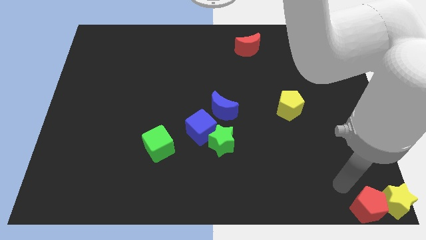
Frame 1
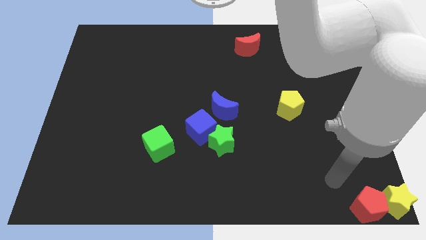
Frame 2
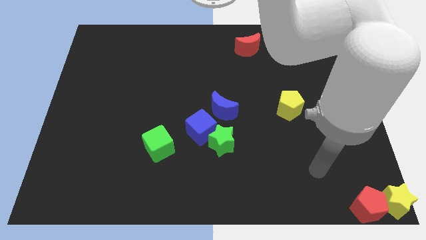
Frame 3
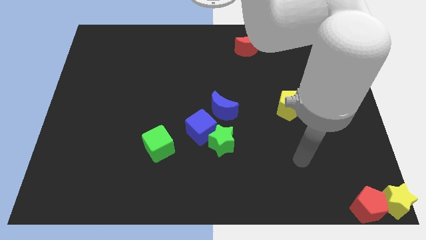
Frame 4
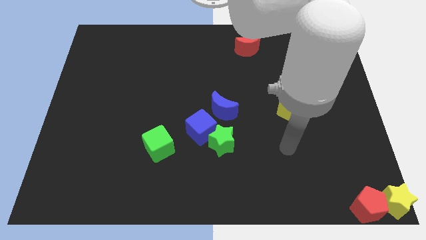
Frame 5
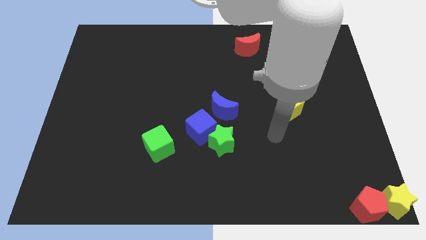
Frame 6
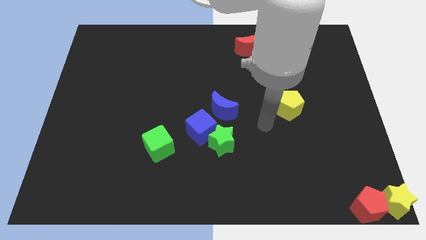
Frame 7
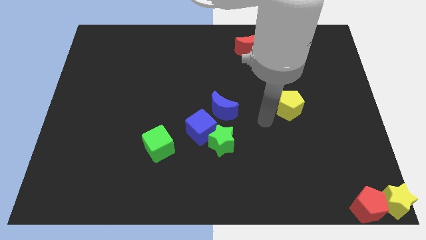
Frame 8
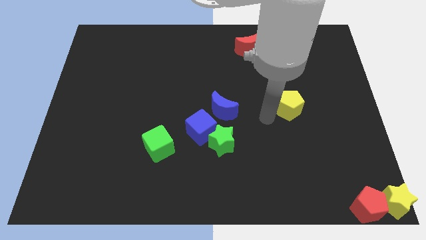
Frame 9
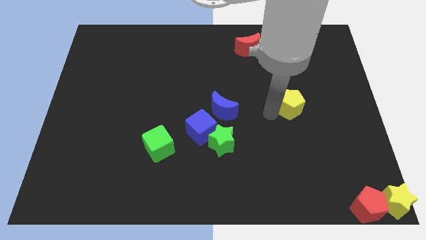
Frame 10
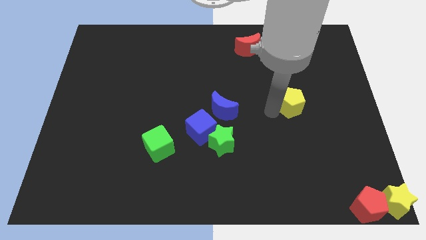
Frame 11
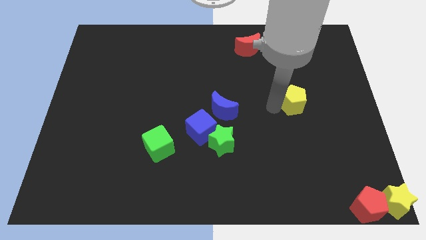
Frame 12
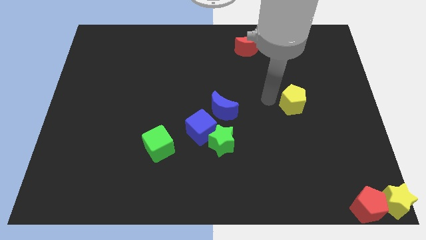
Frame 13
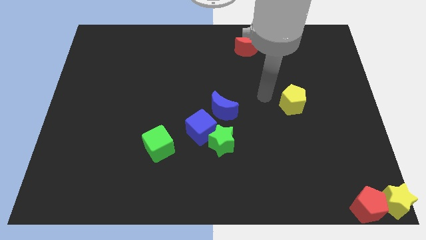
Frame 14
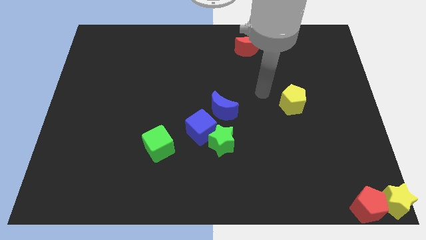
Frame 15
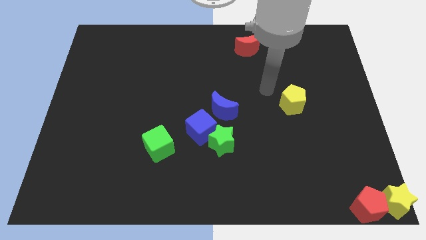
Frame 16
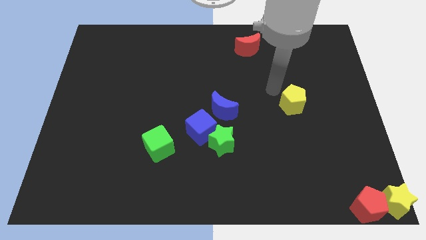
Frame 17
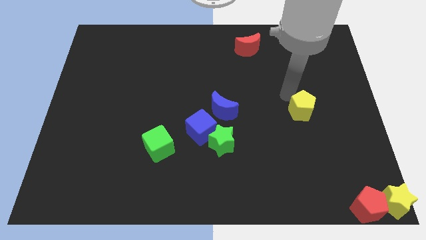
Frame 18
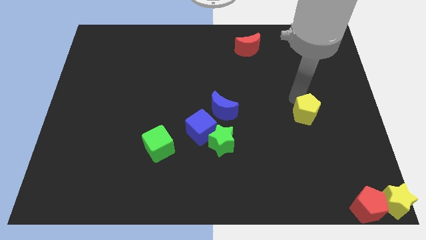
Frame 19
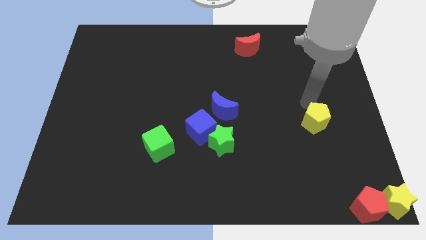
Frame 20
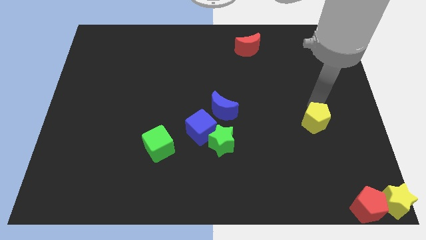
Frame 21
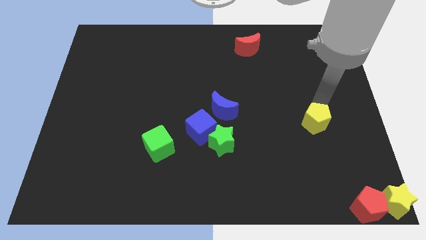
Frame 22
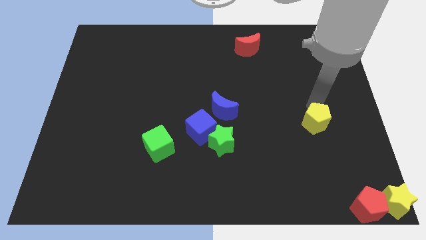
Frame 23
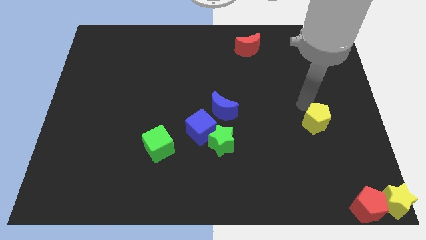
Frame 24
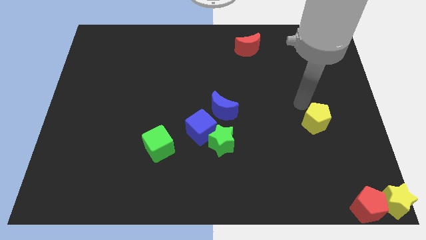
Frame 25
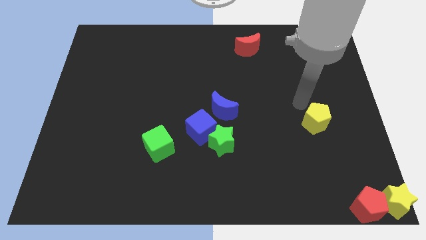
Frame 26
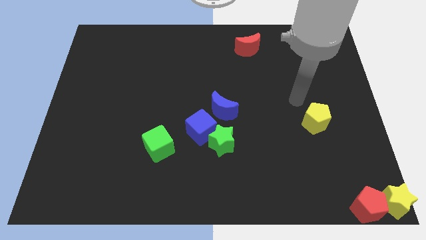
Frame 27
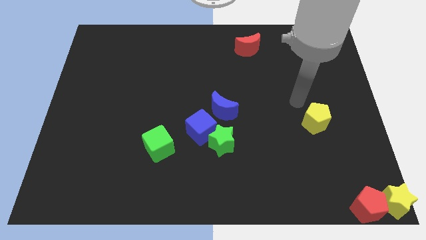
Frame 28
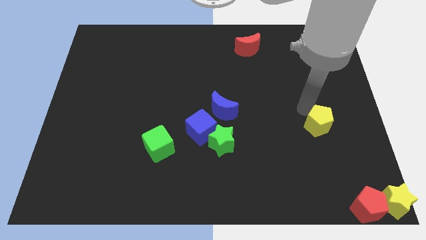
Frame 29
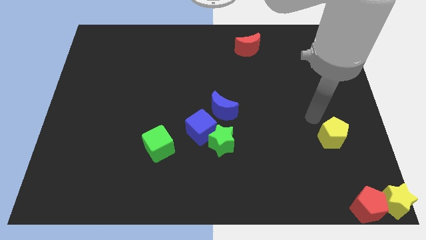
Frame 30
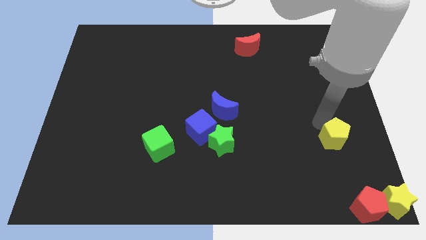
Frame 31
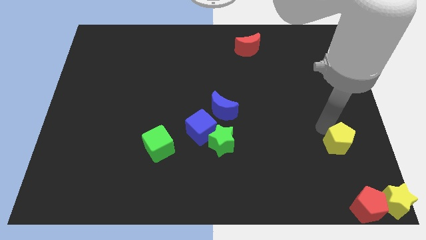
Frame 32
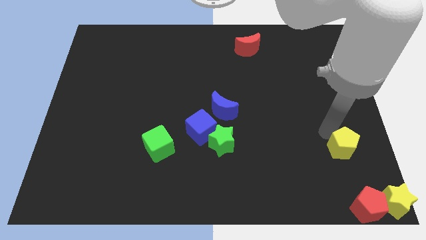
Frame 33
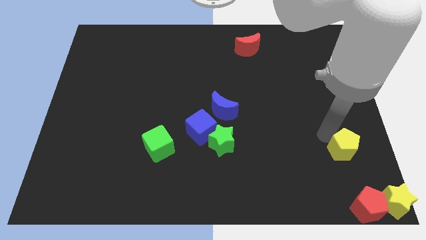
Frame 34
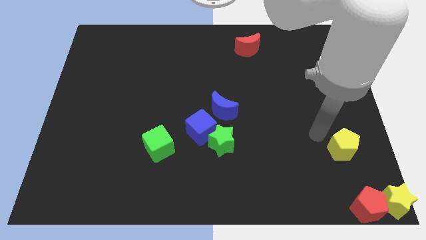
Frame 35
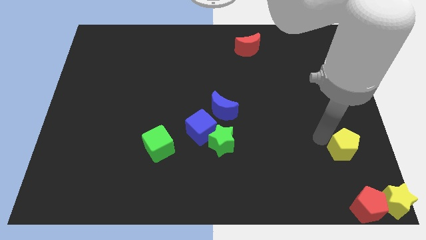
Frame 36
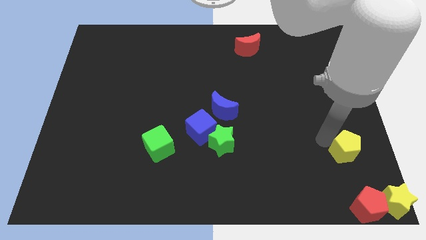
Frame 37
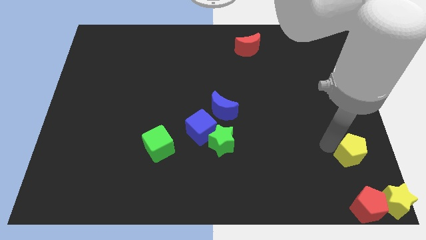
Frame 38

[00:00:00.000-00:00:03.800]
place the yellow pentagon at the top of red pentagon

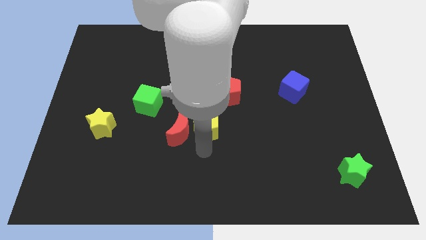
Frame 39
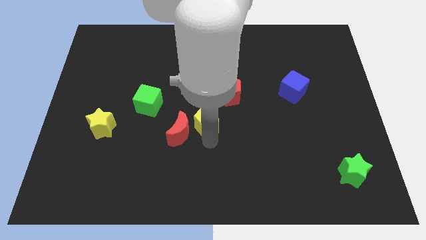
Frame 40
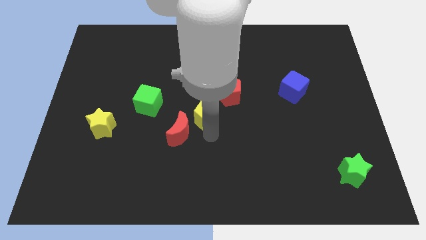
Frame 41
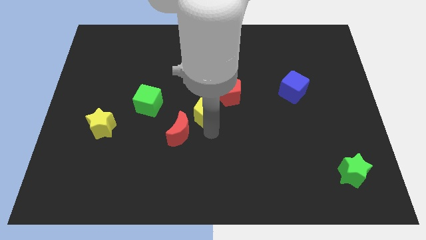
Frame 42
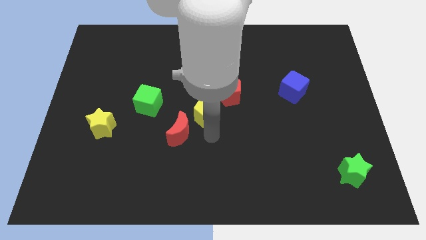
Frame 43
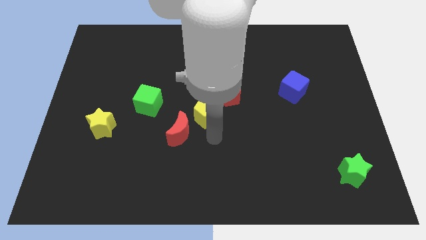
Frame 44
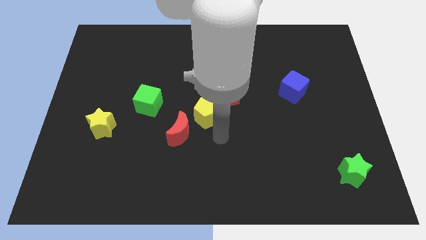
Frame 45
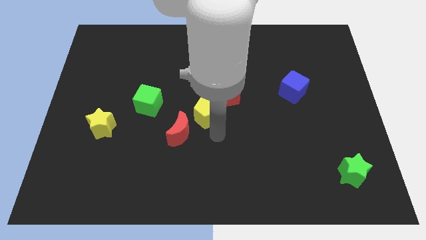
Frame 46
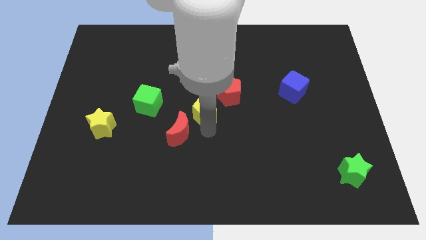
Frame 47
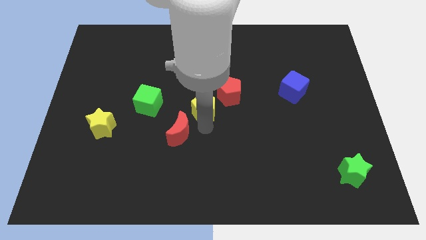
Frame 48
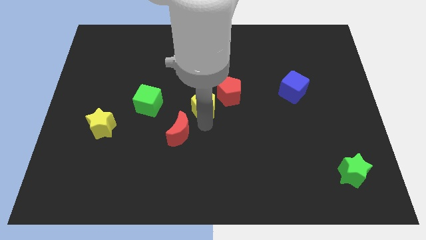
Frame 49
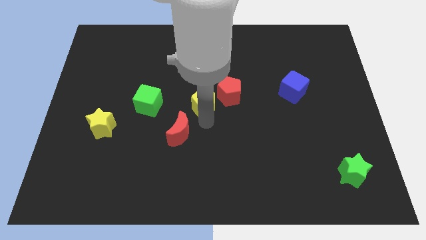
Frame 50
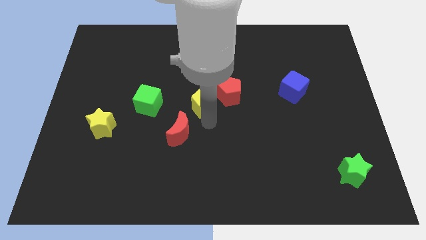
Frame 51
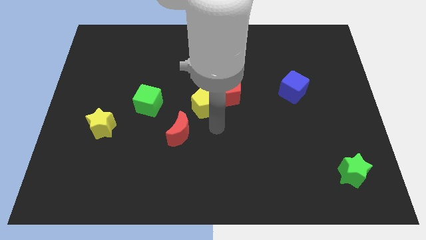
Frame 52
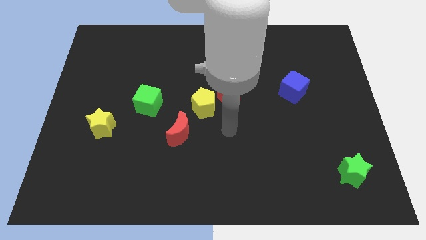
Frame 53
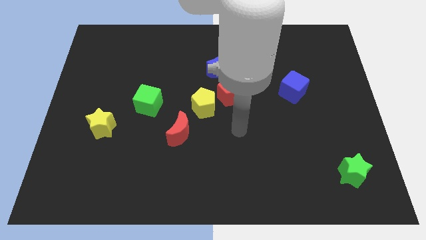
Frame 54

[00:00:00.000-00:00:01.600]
move yellow pentagon slightly upwards

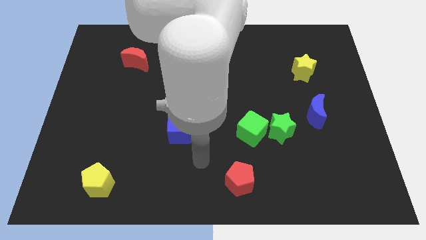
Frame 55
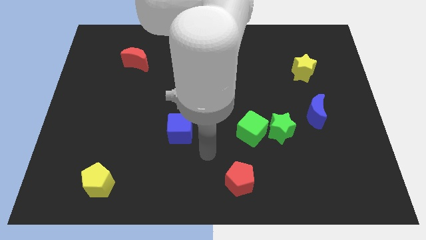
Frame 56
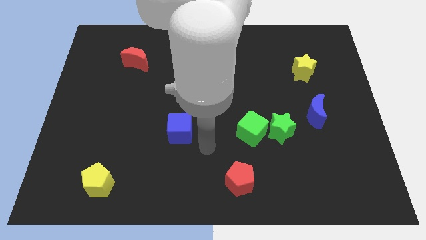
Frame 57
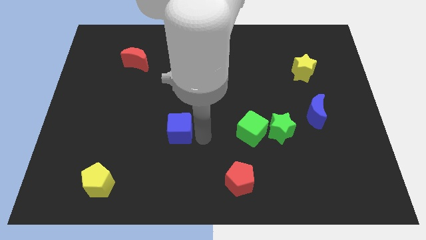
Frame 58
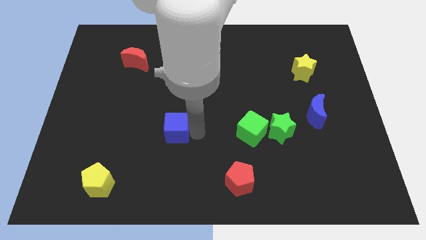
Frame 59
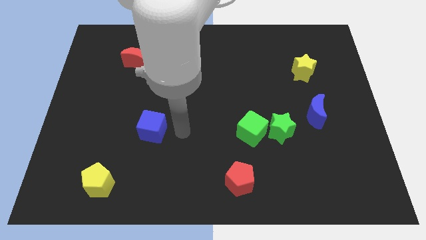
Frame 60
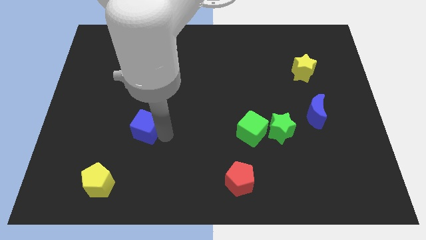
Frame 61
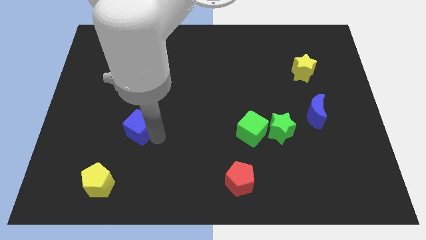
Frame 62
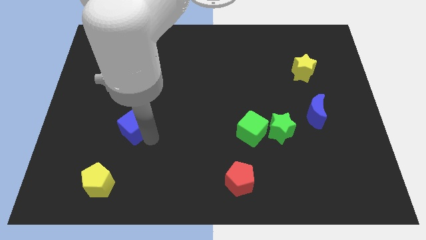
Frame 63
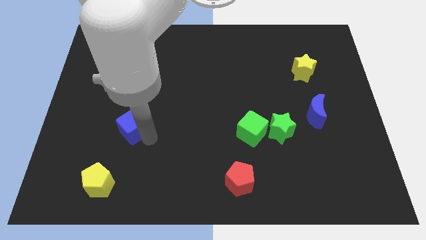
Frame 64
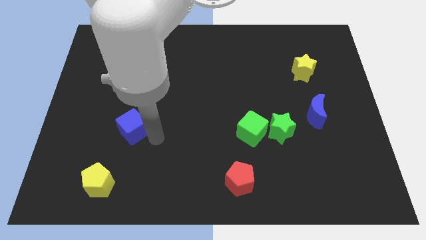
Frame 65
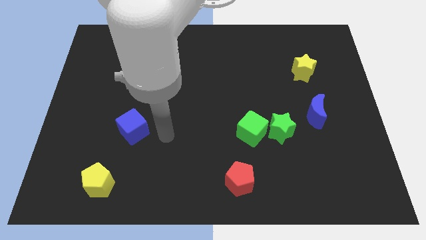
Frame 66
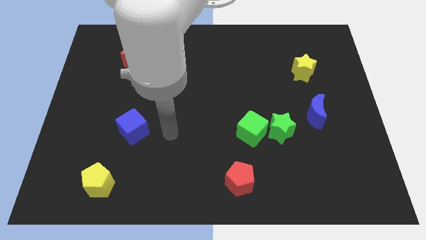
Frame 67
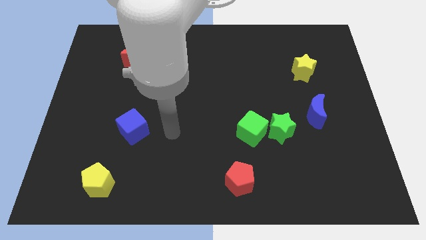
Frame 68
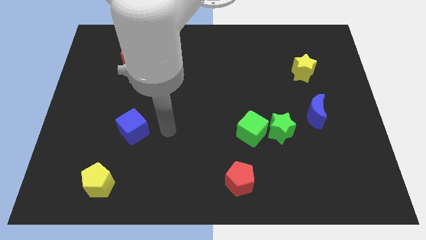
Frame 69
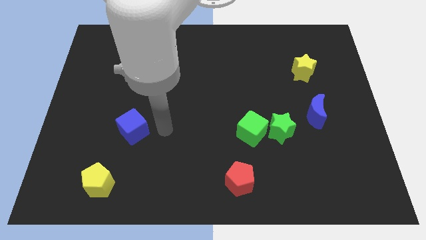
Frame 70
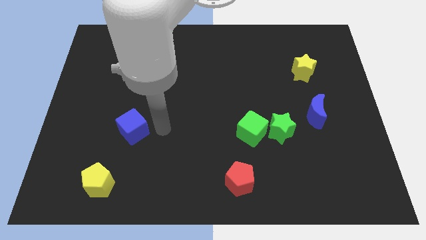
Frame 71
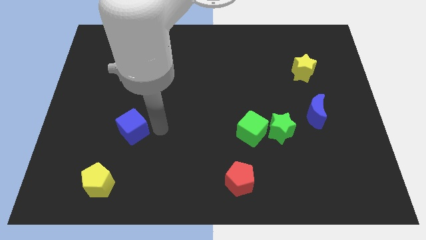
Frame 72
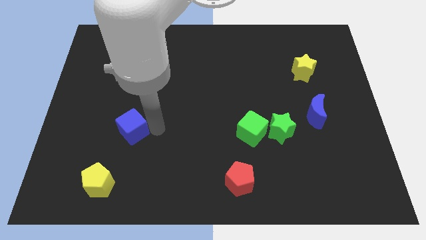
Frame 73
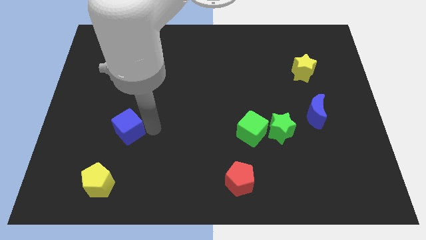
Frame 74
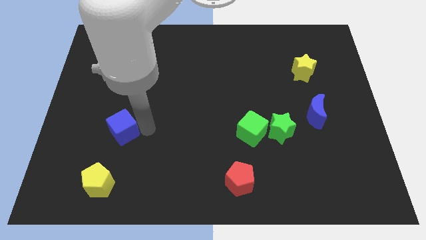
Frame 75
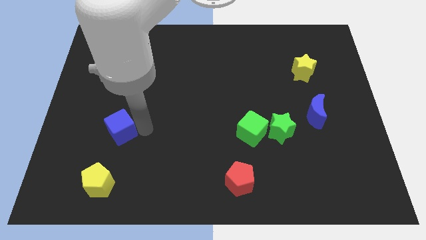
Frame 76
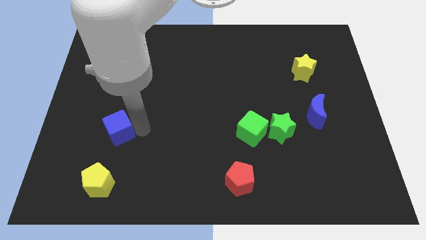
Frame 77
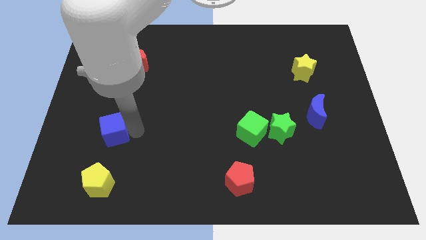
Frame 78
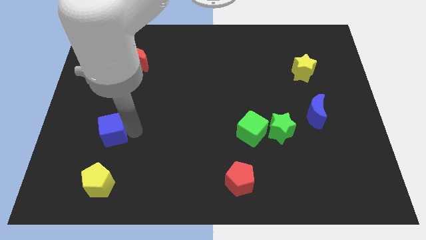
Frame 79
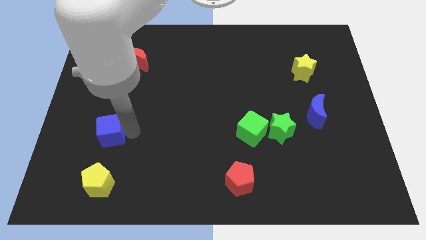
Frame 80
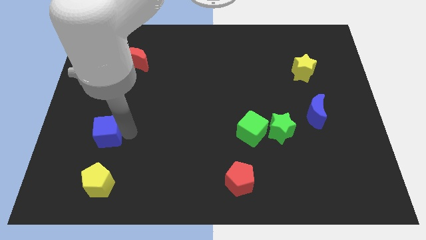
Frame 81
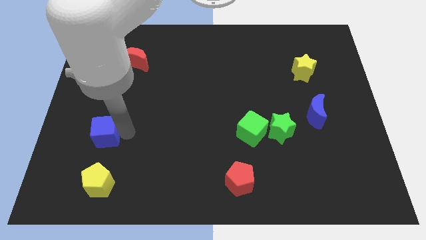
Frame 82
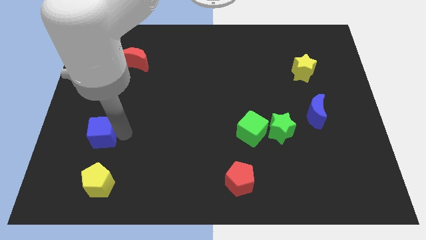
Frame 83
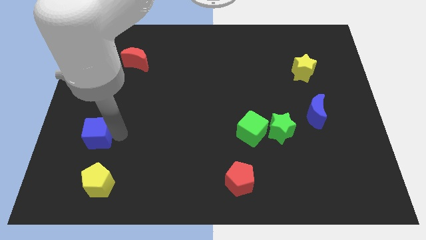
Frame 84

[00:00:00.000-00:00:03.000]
place blue cube above yellow pentagon

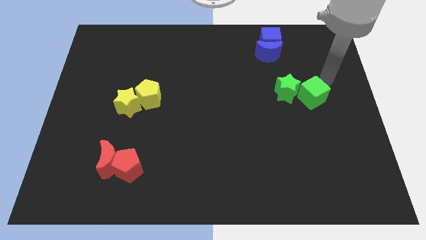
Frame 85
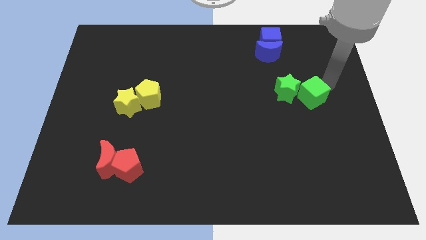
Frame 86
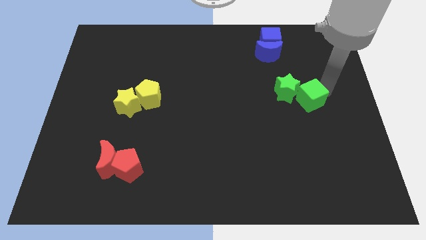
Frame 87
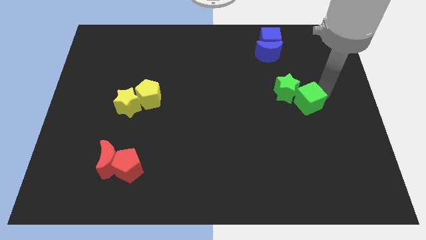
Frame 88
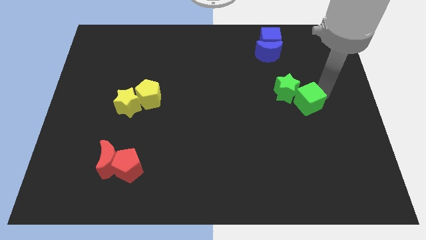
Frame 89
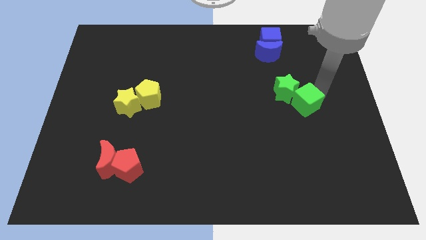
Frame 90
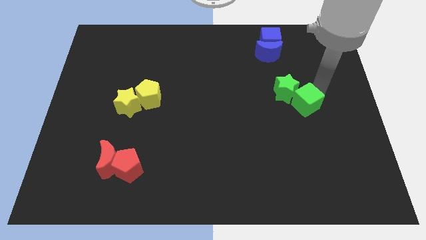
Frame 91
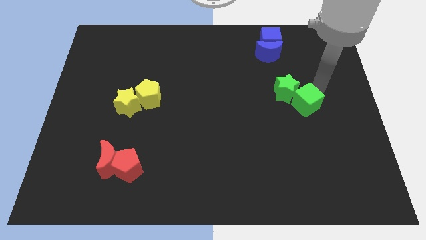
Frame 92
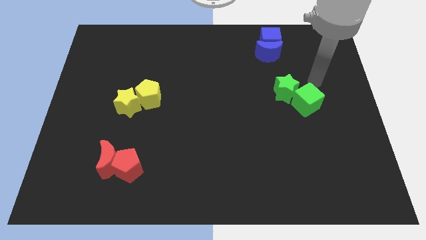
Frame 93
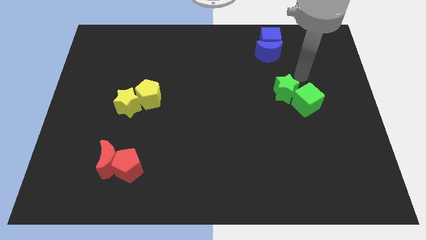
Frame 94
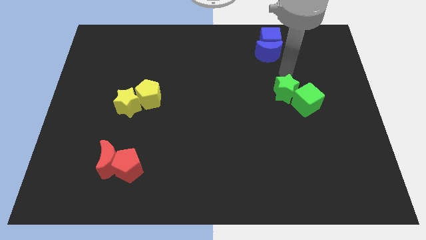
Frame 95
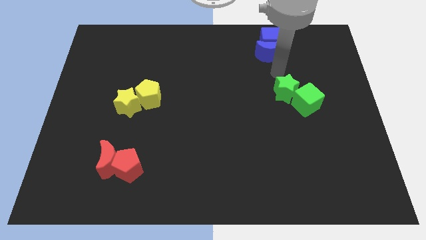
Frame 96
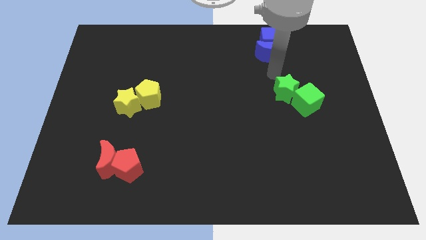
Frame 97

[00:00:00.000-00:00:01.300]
push the green cube to the bottom slightly
